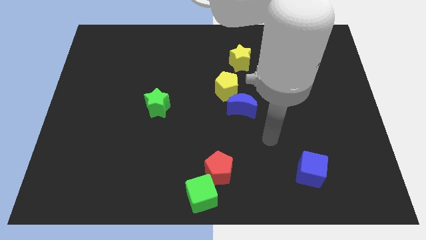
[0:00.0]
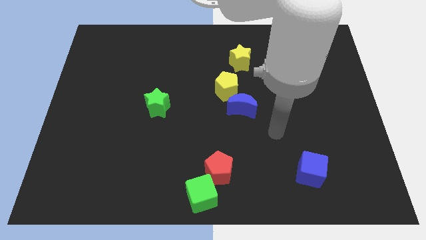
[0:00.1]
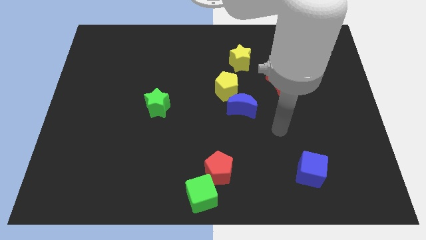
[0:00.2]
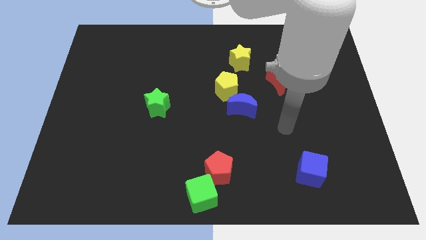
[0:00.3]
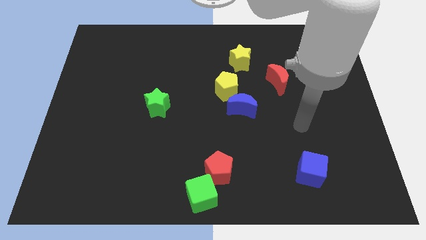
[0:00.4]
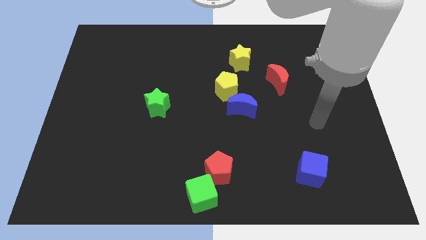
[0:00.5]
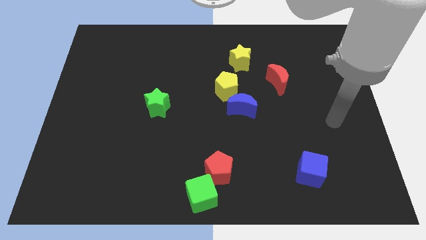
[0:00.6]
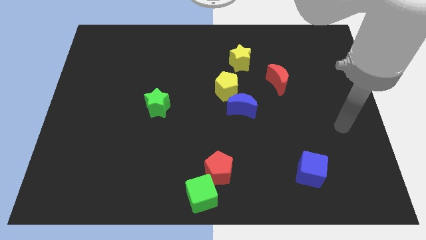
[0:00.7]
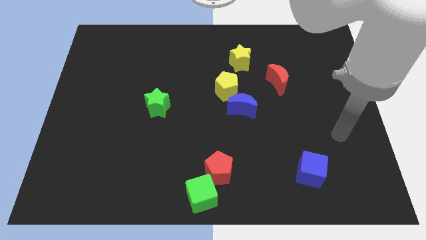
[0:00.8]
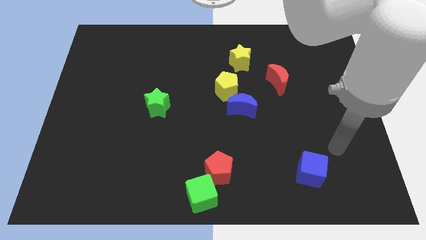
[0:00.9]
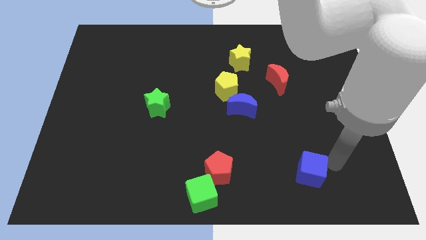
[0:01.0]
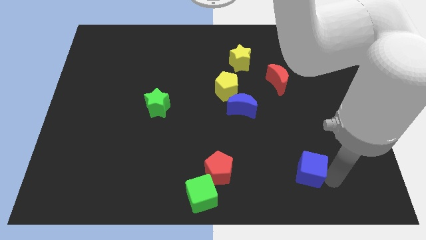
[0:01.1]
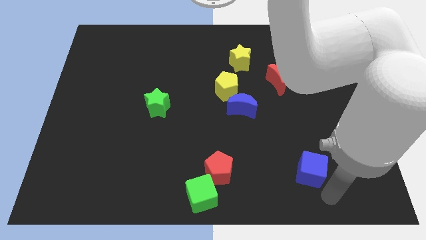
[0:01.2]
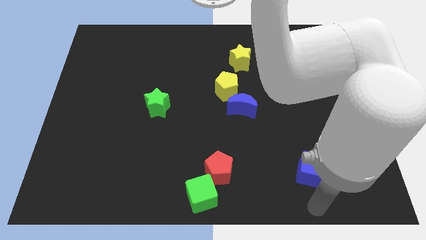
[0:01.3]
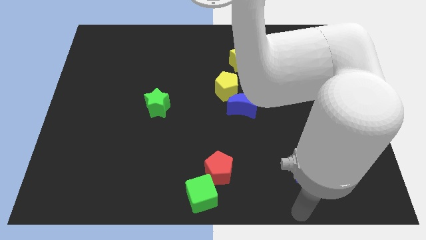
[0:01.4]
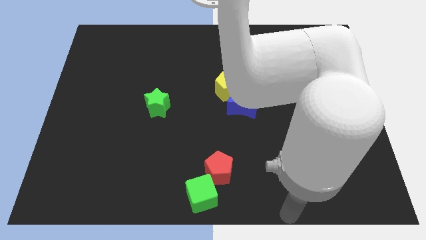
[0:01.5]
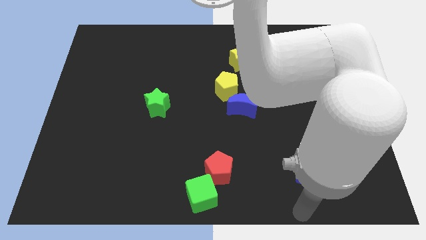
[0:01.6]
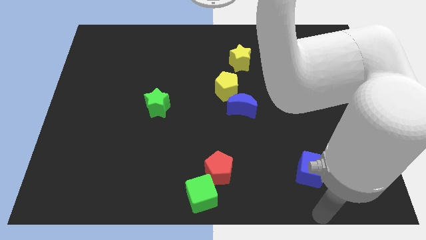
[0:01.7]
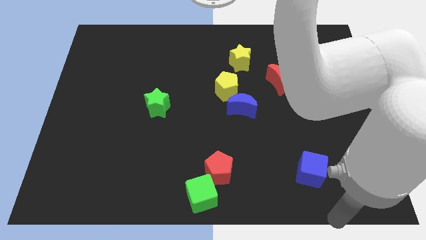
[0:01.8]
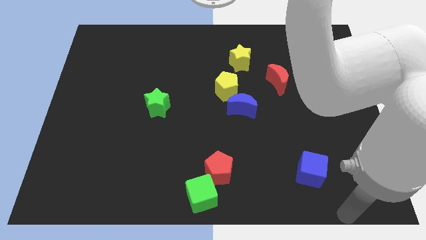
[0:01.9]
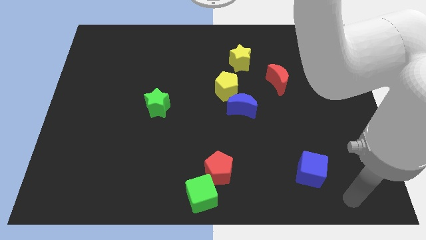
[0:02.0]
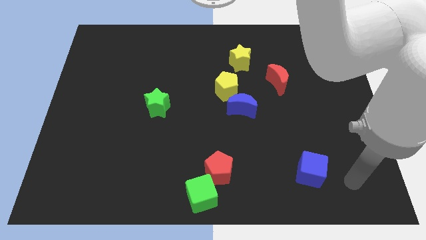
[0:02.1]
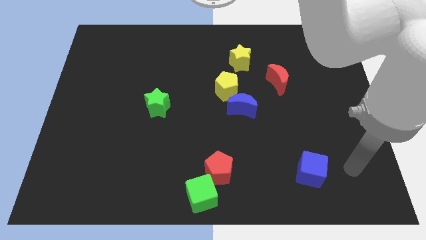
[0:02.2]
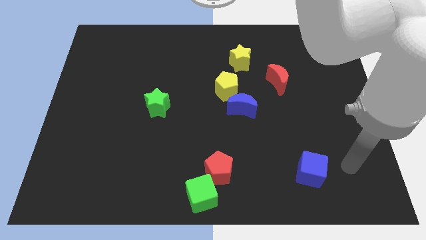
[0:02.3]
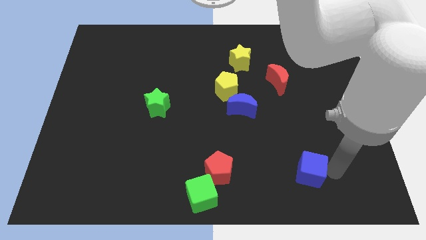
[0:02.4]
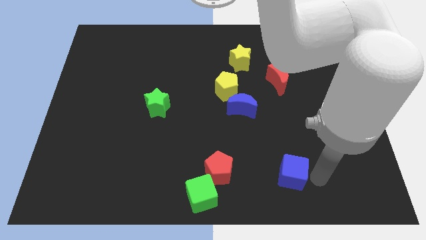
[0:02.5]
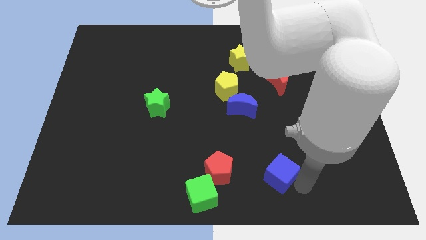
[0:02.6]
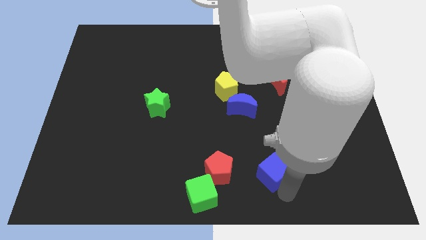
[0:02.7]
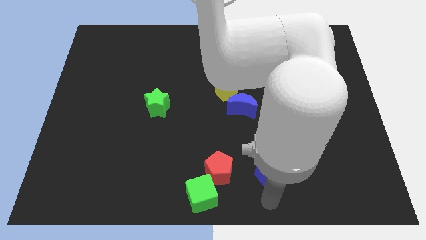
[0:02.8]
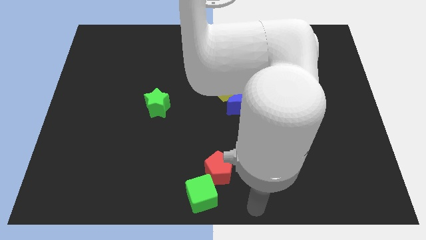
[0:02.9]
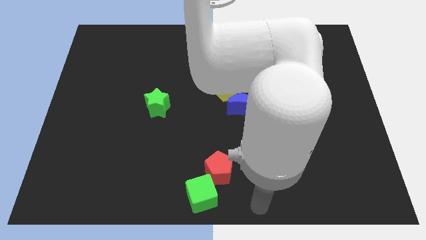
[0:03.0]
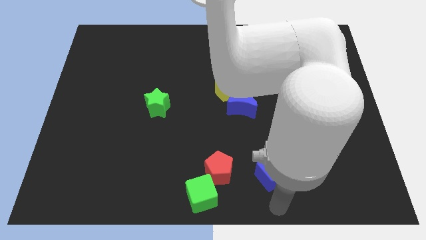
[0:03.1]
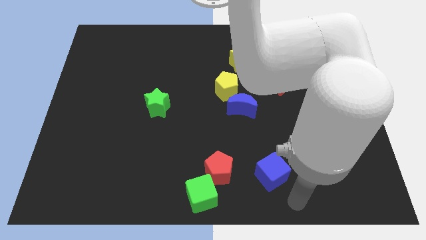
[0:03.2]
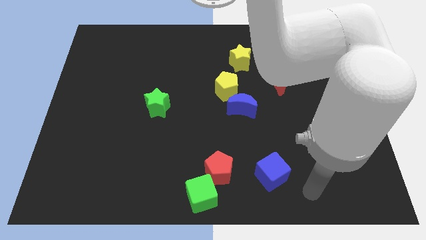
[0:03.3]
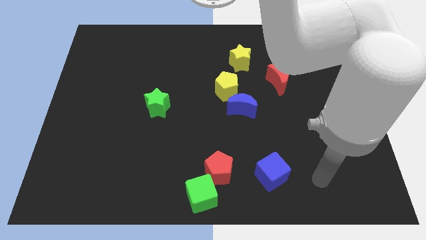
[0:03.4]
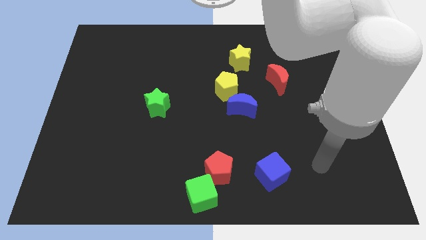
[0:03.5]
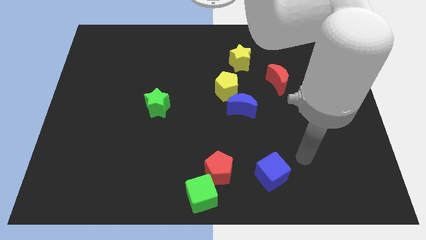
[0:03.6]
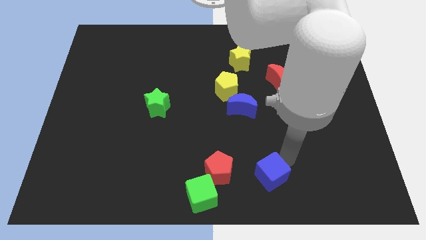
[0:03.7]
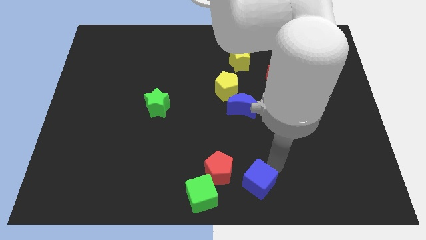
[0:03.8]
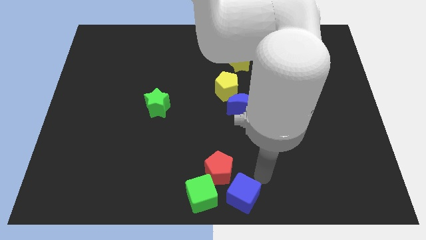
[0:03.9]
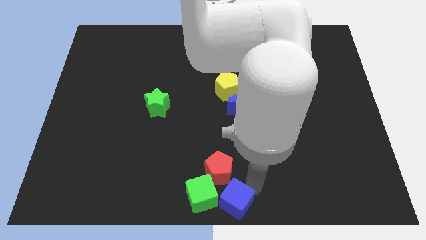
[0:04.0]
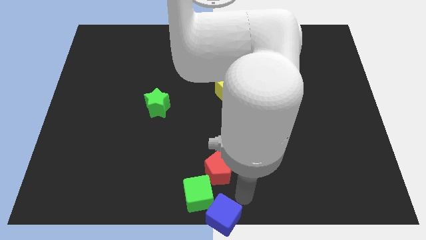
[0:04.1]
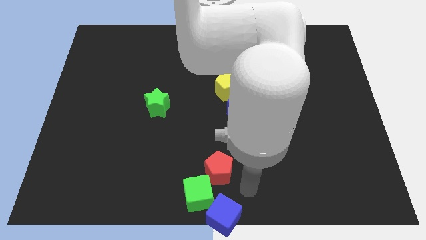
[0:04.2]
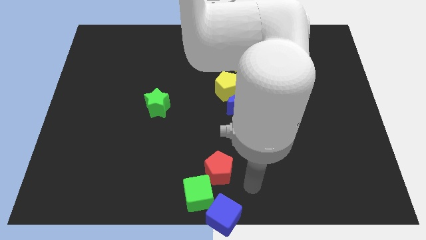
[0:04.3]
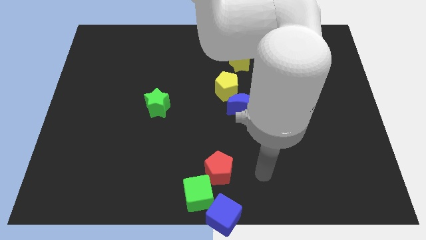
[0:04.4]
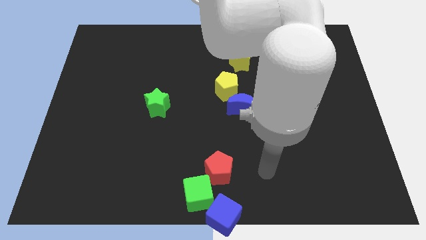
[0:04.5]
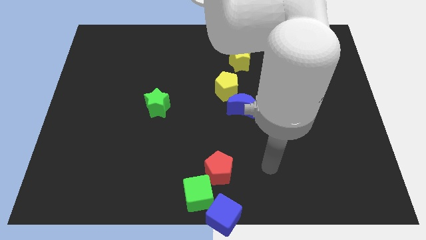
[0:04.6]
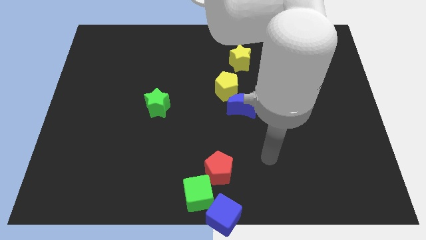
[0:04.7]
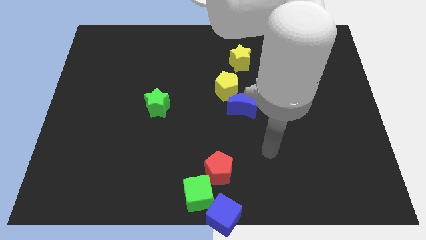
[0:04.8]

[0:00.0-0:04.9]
move the blue cube to the bottom center of the board

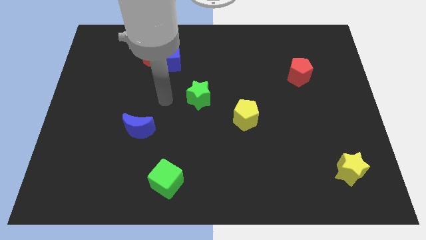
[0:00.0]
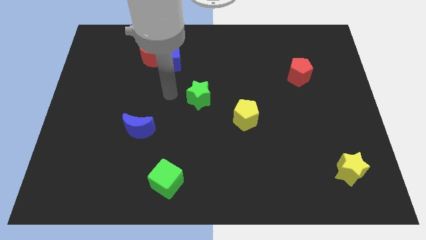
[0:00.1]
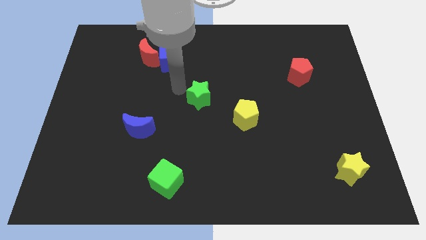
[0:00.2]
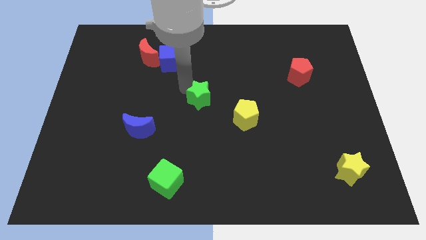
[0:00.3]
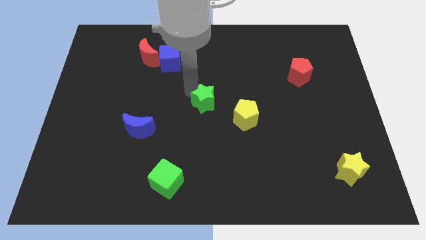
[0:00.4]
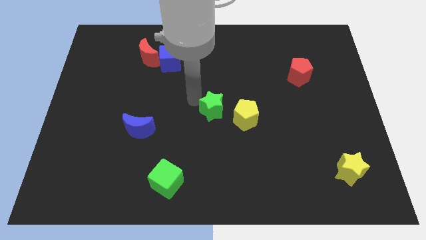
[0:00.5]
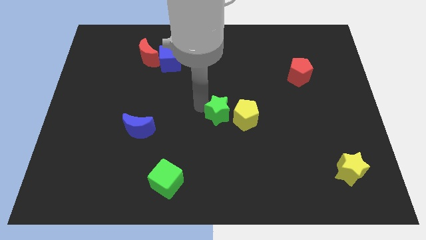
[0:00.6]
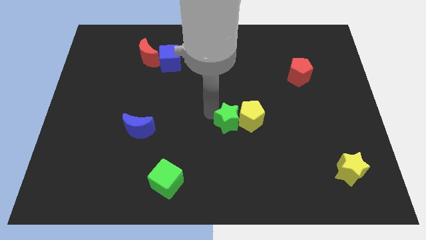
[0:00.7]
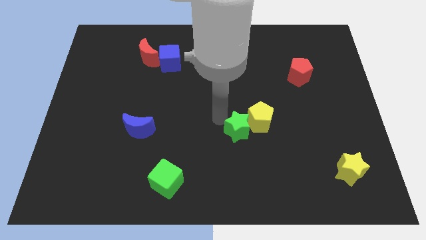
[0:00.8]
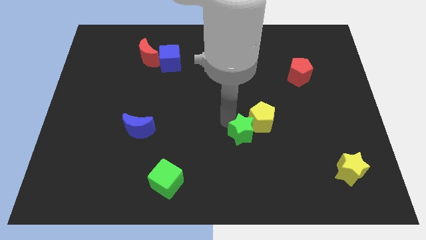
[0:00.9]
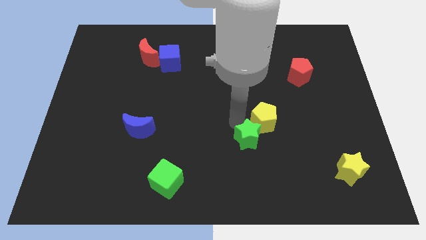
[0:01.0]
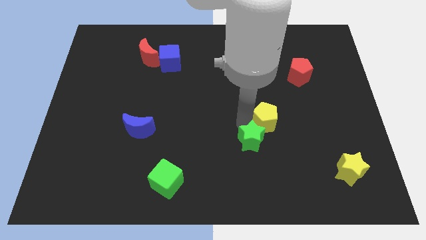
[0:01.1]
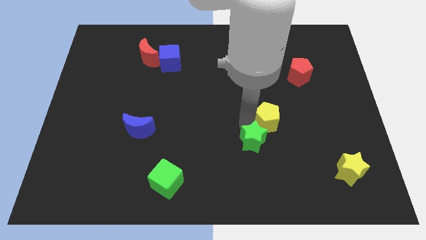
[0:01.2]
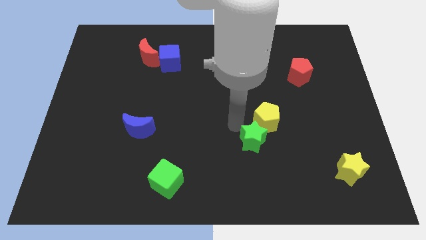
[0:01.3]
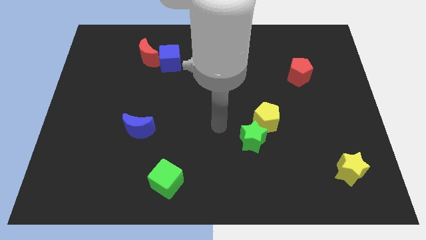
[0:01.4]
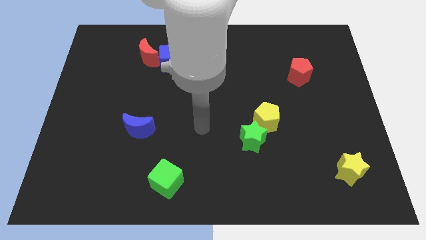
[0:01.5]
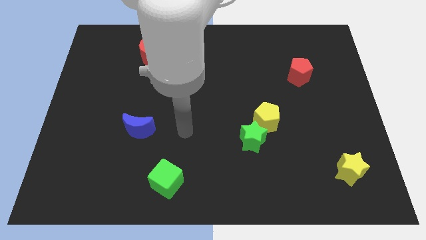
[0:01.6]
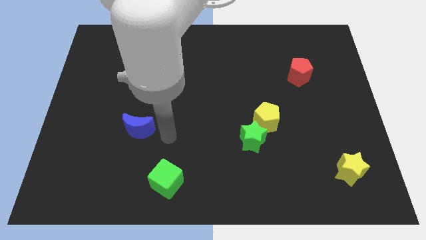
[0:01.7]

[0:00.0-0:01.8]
move the green star into the yellow pentagon

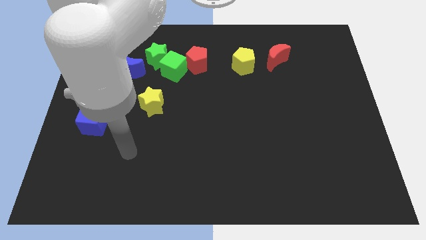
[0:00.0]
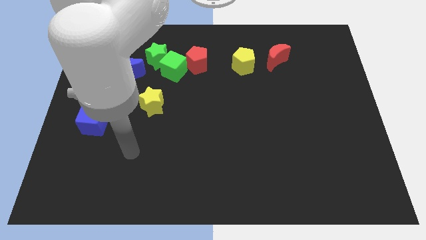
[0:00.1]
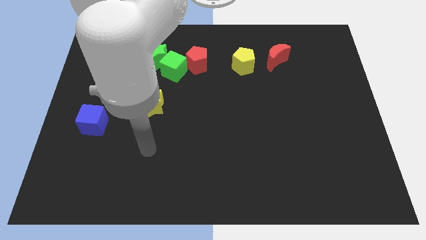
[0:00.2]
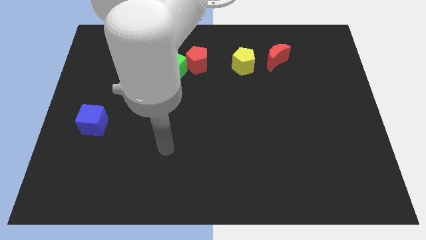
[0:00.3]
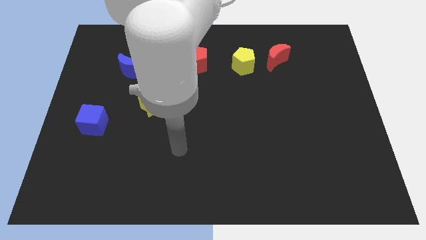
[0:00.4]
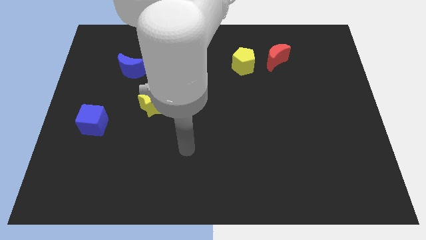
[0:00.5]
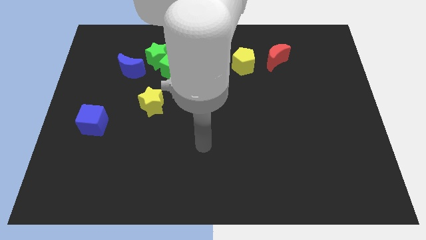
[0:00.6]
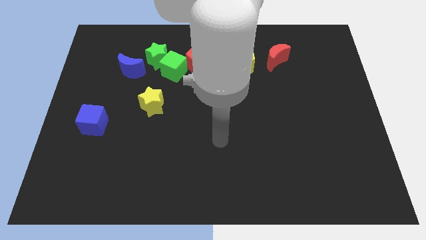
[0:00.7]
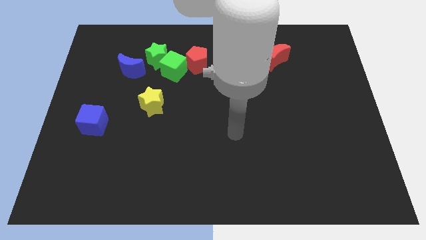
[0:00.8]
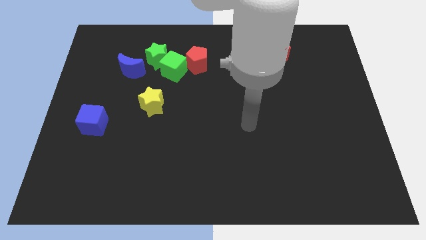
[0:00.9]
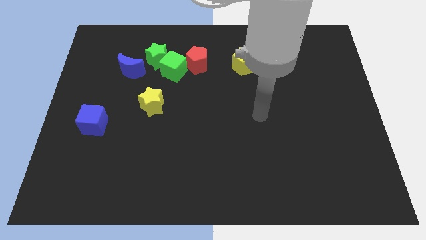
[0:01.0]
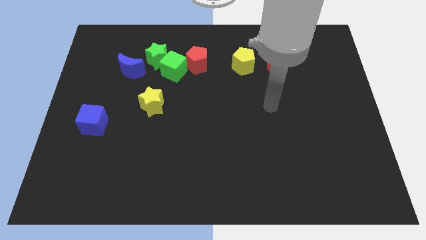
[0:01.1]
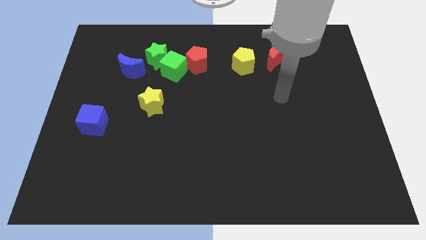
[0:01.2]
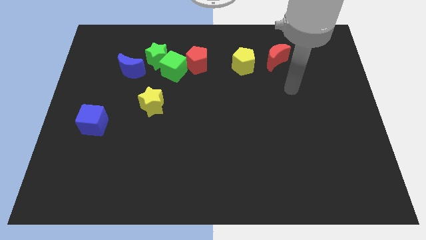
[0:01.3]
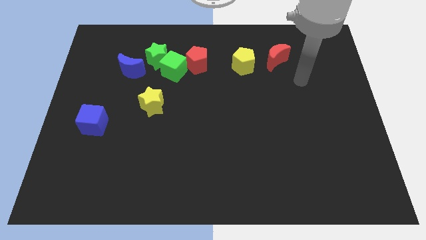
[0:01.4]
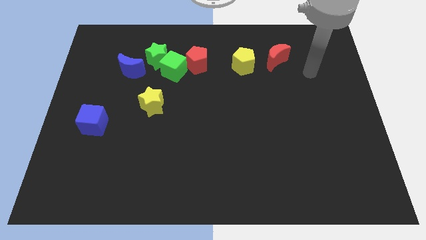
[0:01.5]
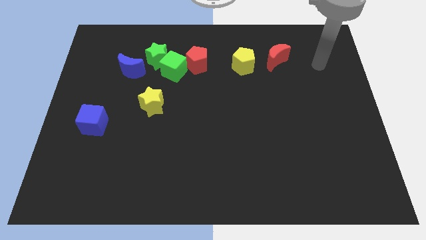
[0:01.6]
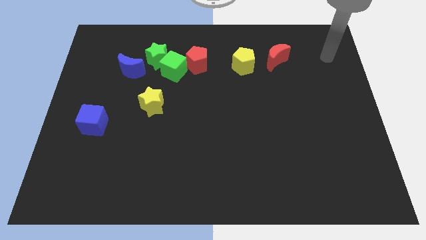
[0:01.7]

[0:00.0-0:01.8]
put your arm to the right of the yellow pentagon

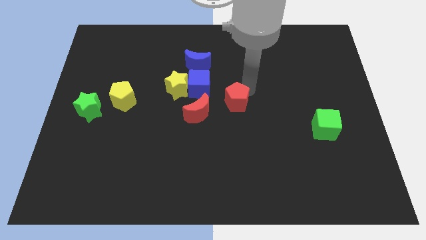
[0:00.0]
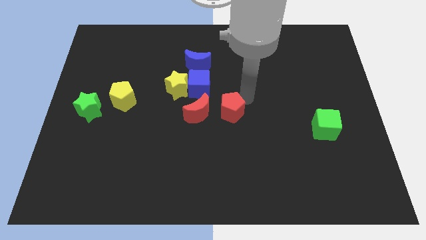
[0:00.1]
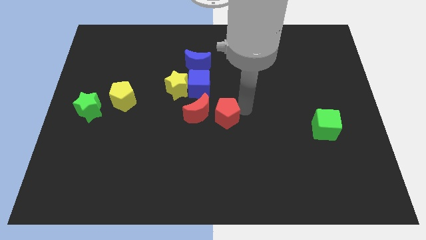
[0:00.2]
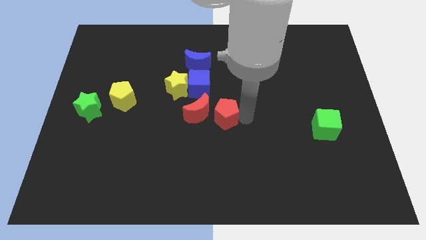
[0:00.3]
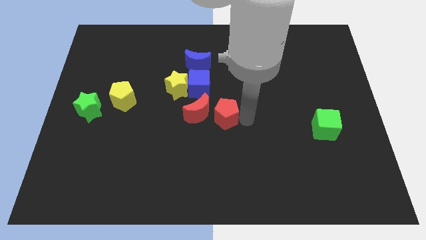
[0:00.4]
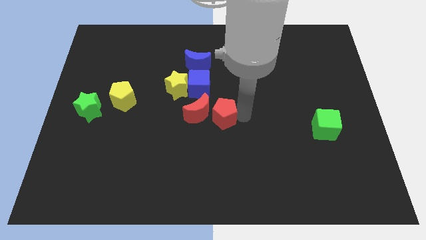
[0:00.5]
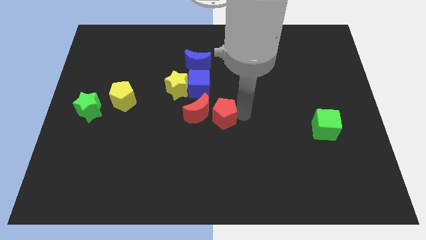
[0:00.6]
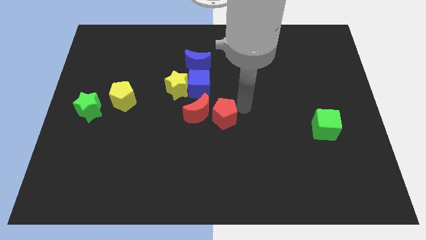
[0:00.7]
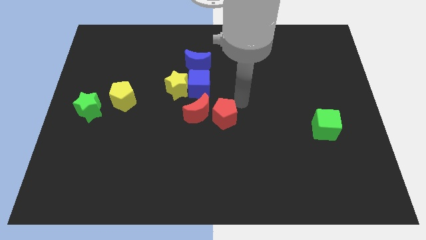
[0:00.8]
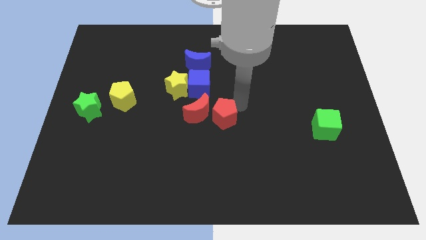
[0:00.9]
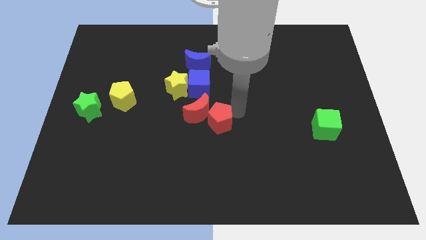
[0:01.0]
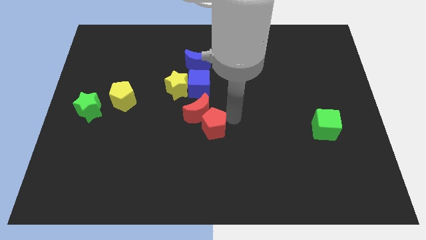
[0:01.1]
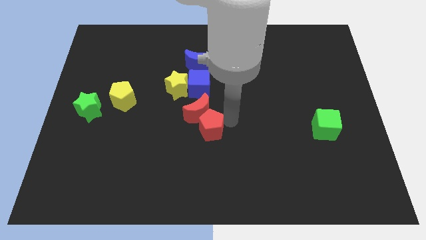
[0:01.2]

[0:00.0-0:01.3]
place red pentagon right to red moon
